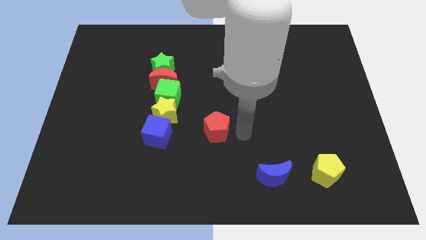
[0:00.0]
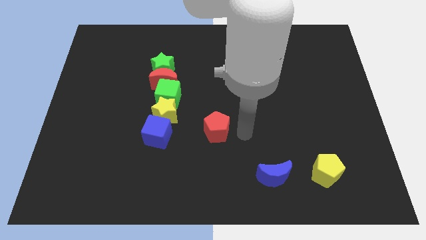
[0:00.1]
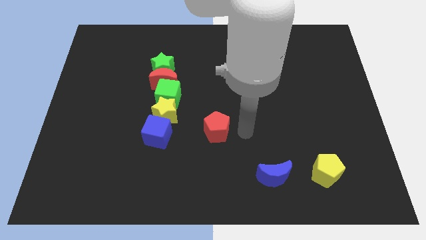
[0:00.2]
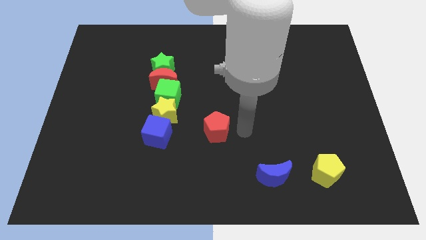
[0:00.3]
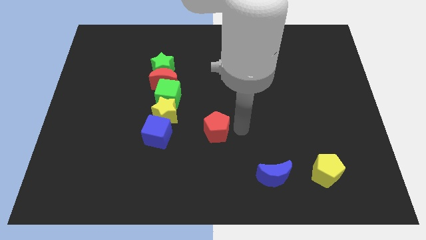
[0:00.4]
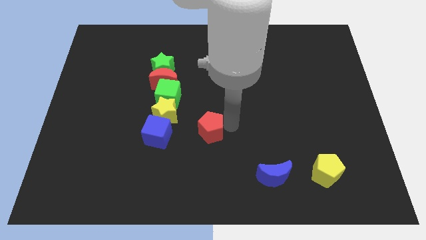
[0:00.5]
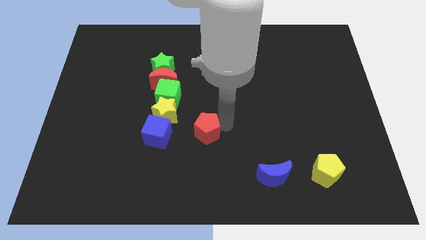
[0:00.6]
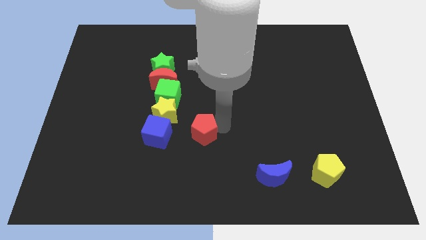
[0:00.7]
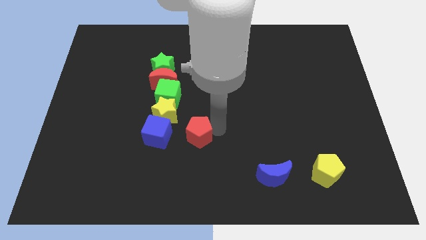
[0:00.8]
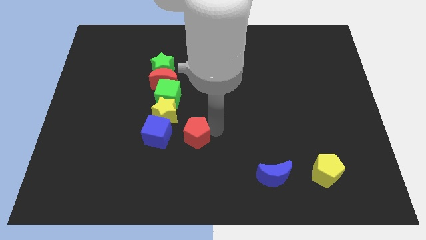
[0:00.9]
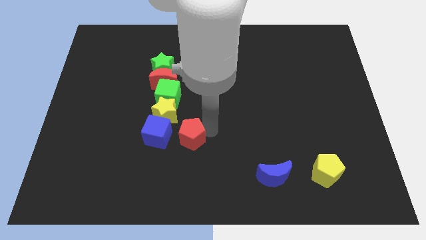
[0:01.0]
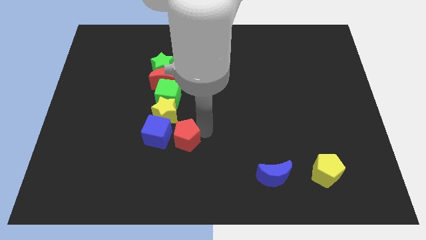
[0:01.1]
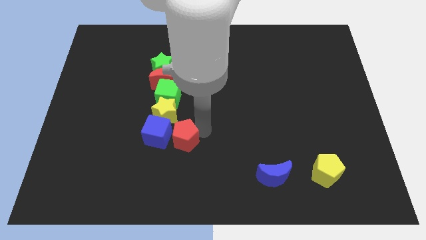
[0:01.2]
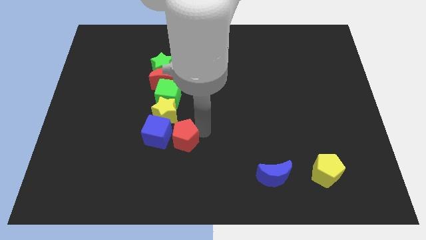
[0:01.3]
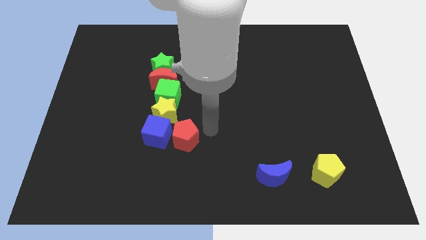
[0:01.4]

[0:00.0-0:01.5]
place red pentagon beside blue cube

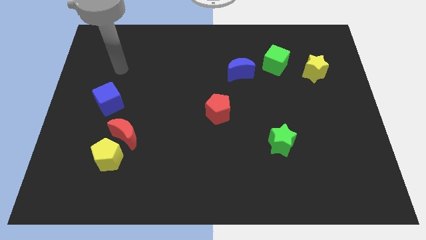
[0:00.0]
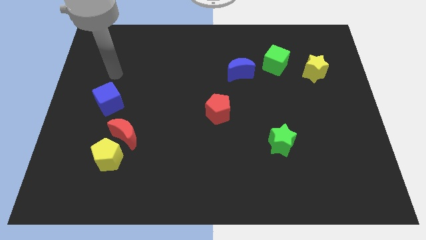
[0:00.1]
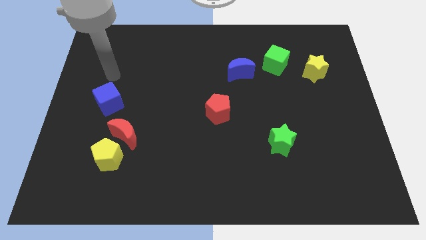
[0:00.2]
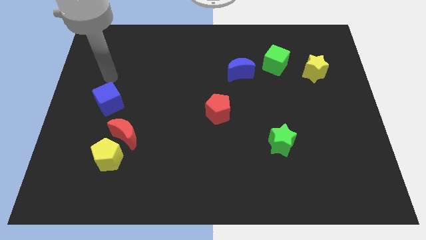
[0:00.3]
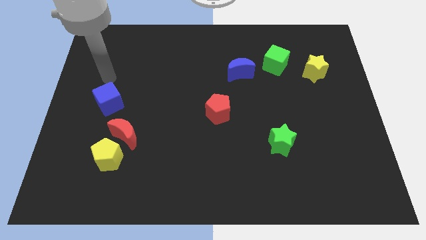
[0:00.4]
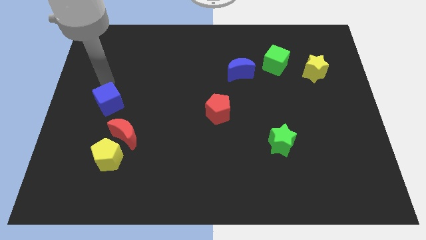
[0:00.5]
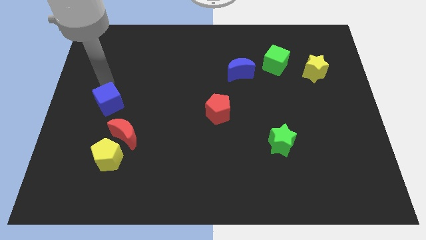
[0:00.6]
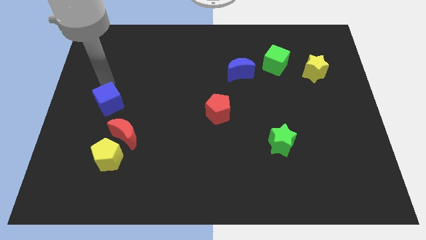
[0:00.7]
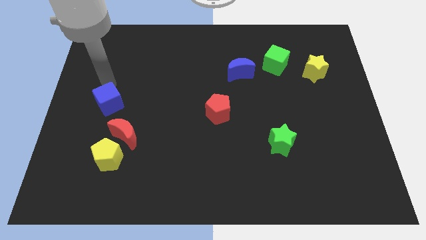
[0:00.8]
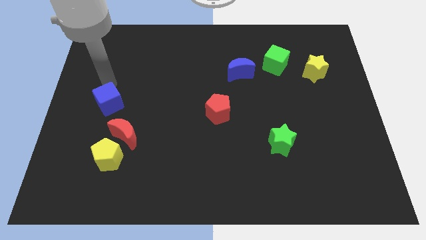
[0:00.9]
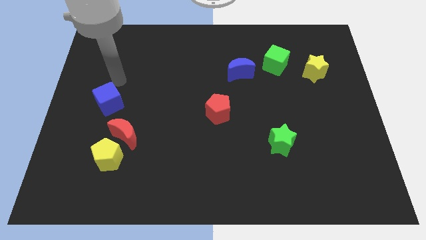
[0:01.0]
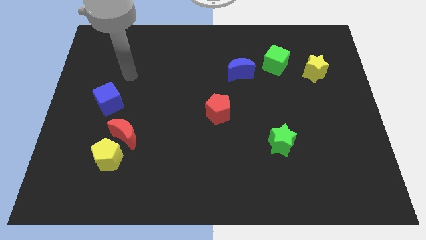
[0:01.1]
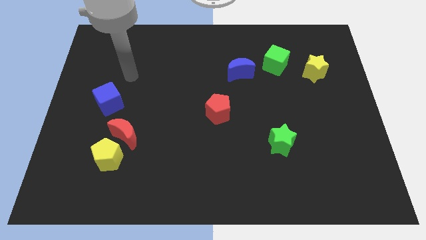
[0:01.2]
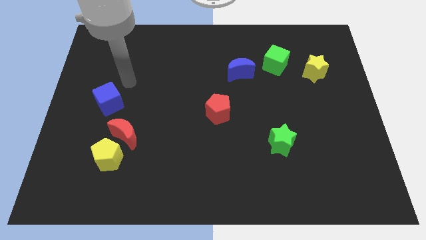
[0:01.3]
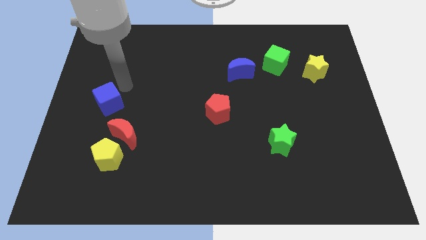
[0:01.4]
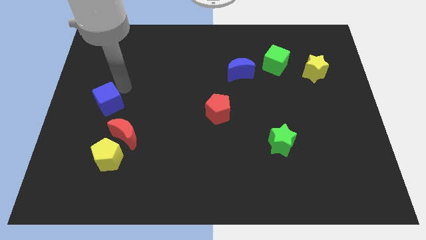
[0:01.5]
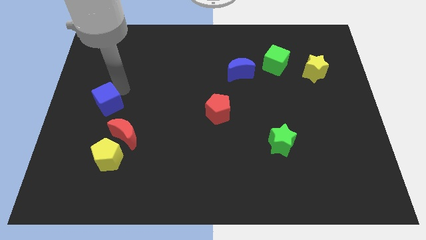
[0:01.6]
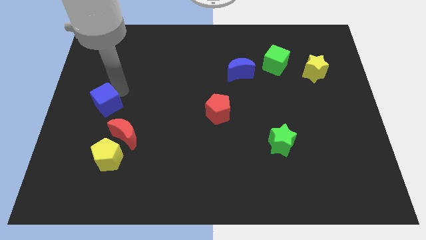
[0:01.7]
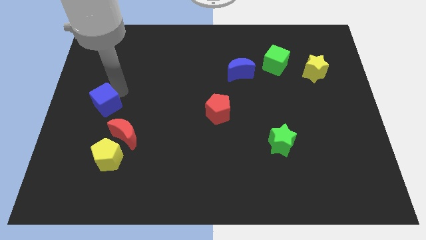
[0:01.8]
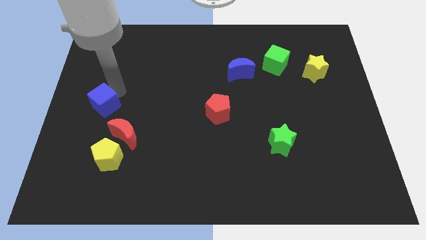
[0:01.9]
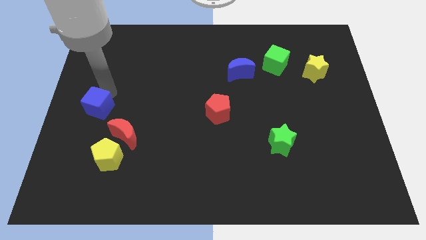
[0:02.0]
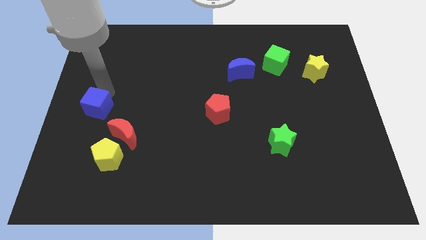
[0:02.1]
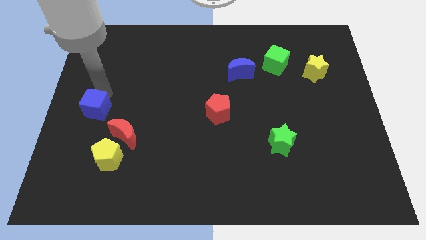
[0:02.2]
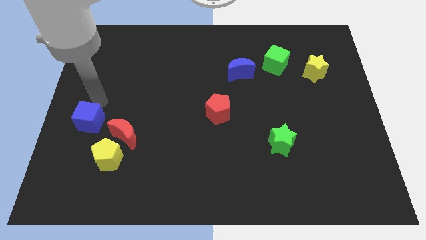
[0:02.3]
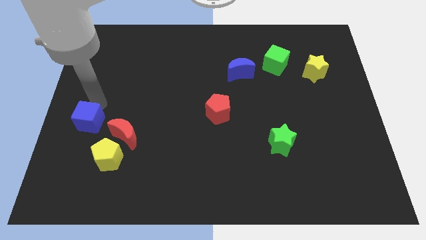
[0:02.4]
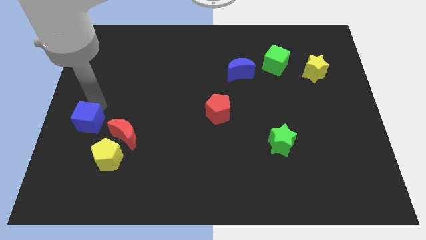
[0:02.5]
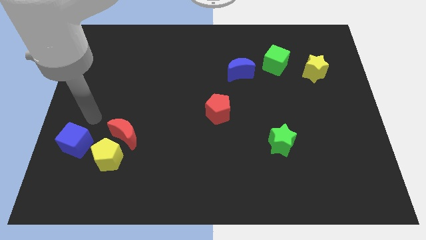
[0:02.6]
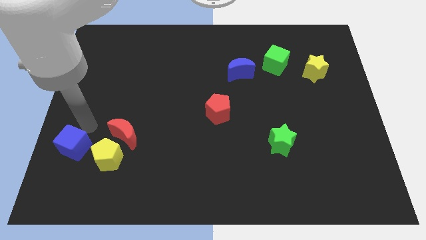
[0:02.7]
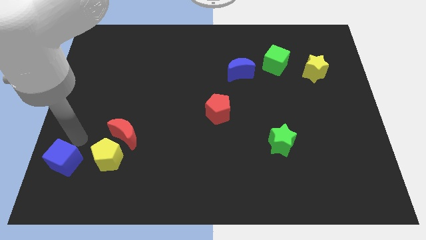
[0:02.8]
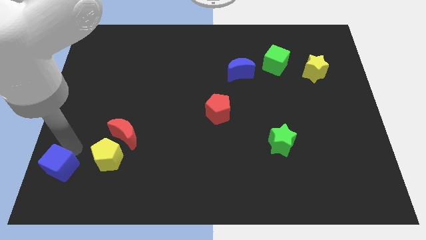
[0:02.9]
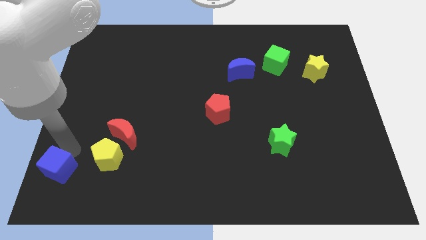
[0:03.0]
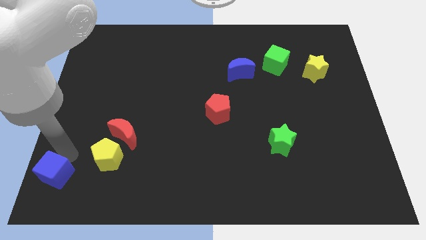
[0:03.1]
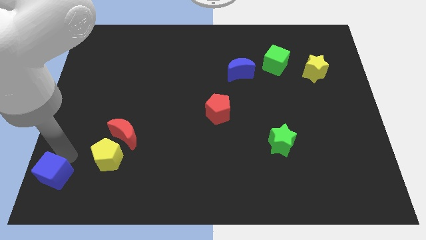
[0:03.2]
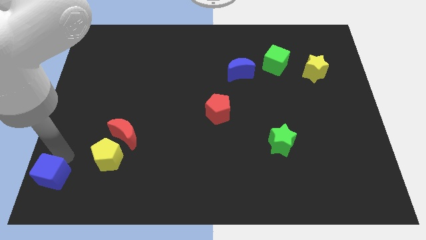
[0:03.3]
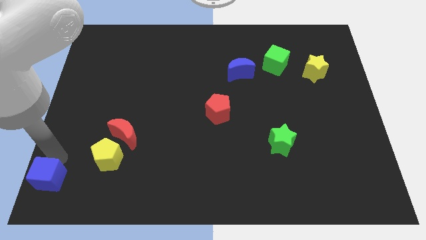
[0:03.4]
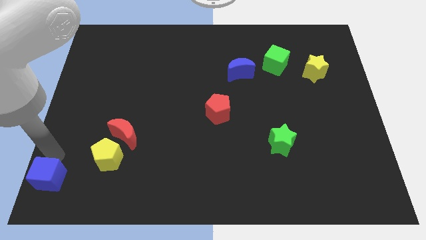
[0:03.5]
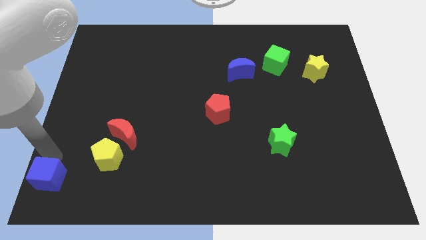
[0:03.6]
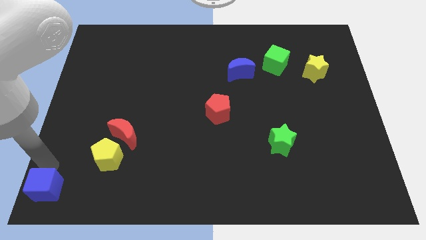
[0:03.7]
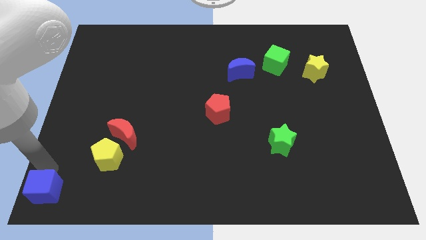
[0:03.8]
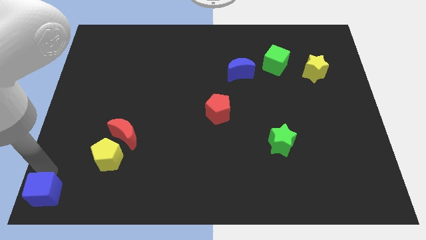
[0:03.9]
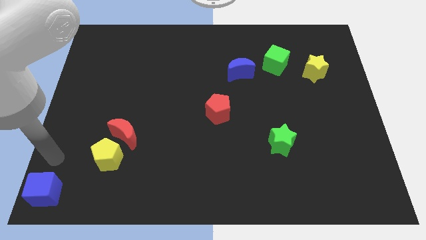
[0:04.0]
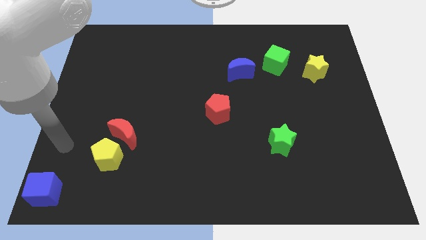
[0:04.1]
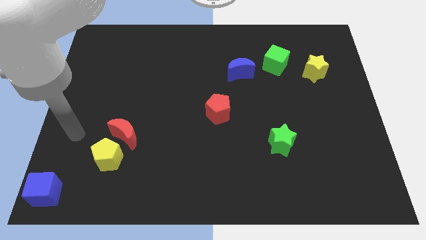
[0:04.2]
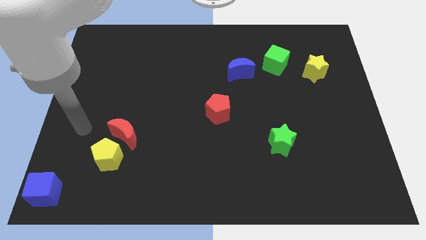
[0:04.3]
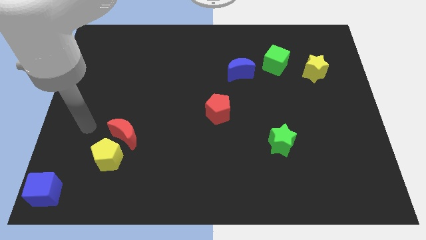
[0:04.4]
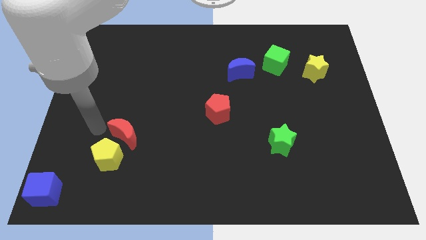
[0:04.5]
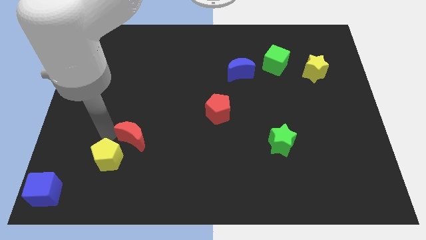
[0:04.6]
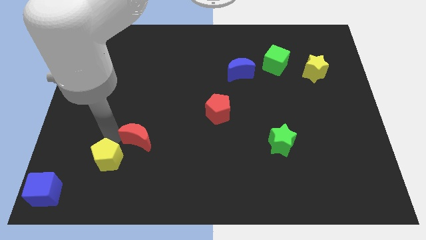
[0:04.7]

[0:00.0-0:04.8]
move blue cube to the bottom left corner

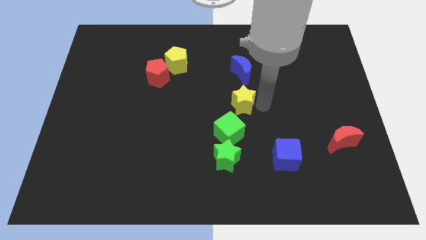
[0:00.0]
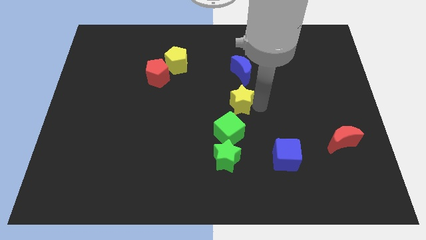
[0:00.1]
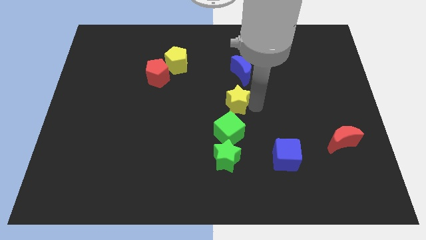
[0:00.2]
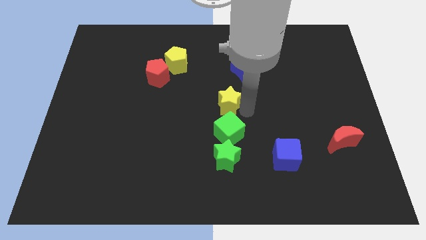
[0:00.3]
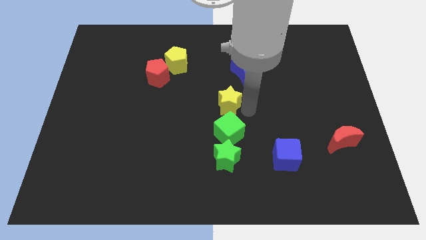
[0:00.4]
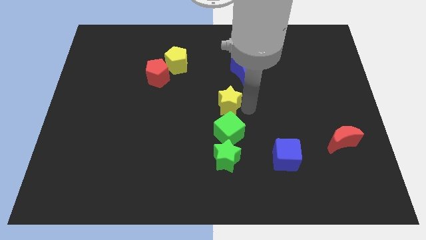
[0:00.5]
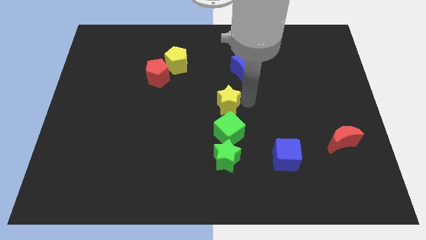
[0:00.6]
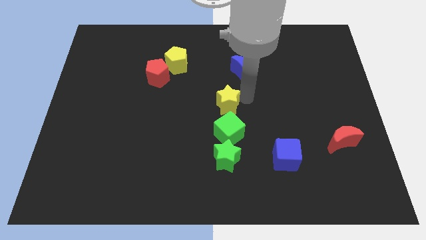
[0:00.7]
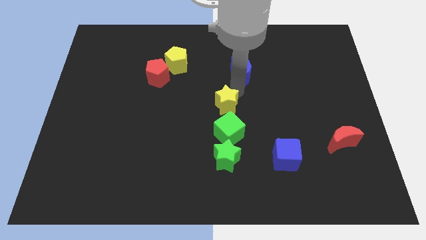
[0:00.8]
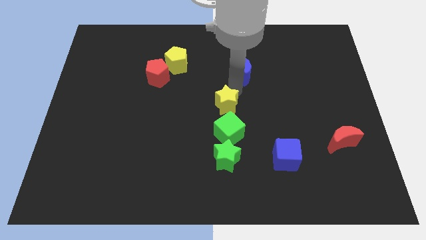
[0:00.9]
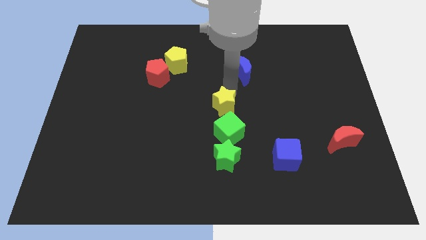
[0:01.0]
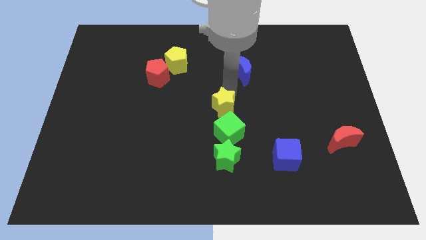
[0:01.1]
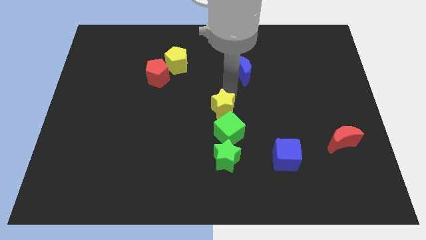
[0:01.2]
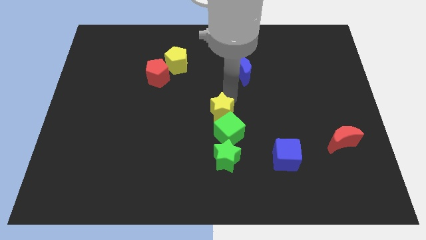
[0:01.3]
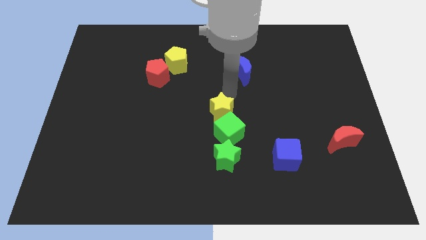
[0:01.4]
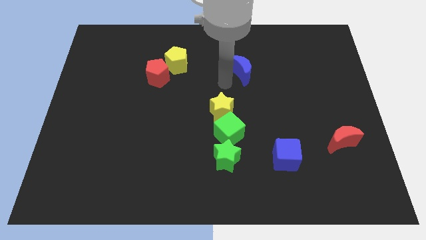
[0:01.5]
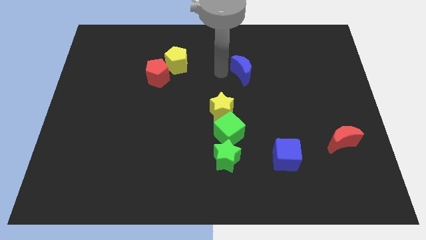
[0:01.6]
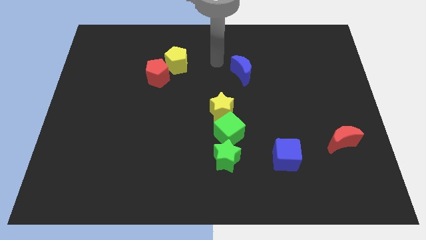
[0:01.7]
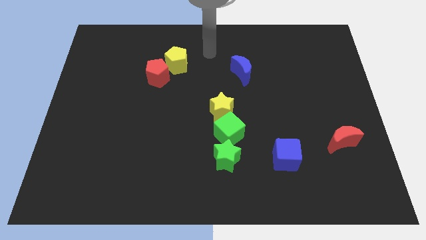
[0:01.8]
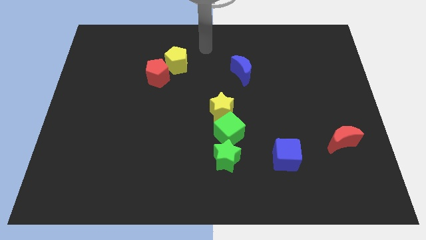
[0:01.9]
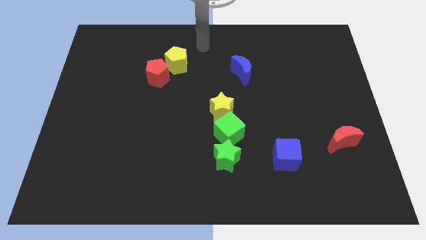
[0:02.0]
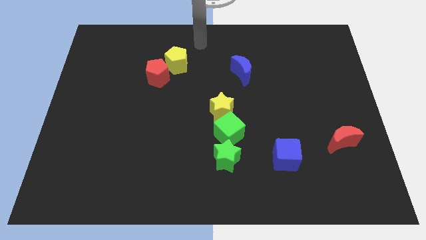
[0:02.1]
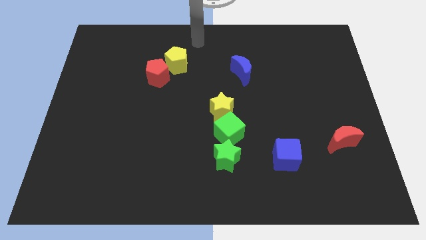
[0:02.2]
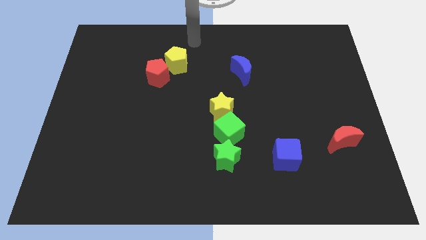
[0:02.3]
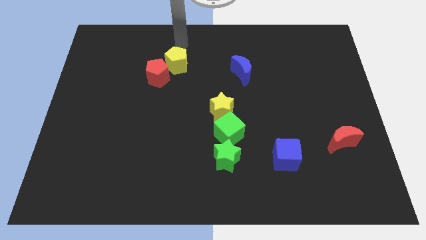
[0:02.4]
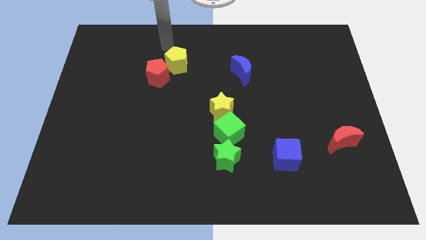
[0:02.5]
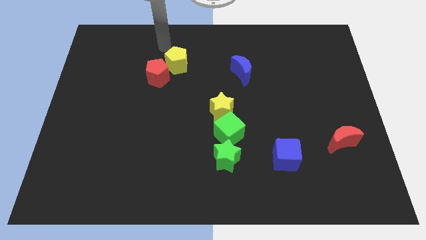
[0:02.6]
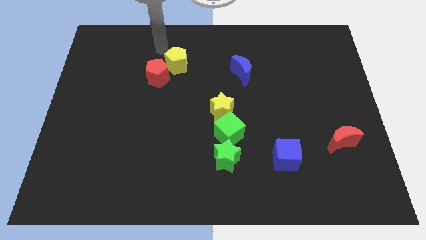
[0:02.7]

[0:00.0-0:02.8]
place the yellow star top to the green cube
